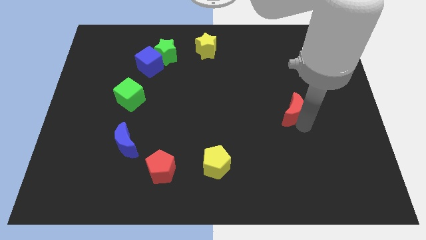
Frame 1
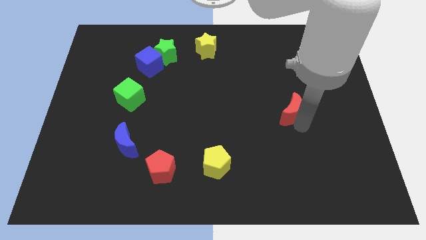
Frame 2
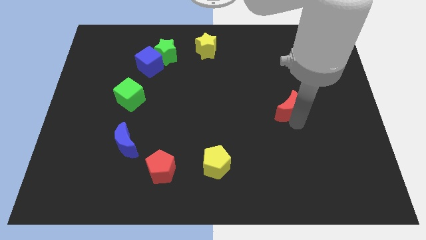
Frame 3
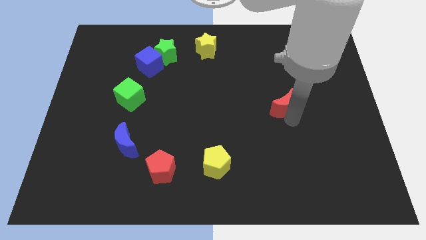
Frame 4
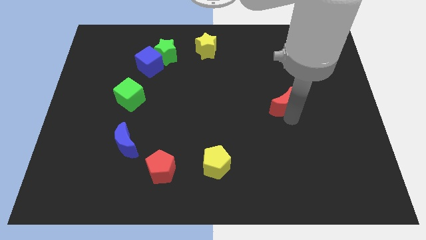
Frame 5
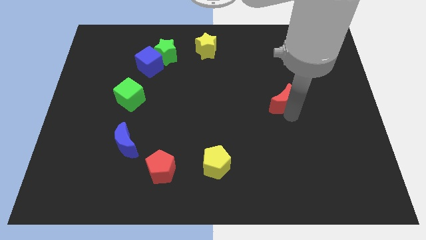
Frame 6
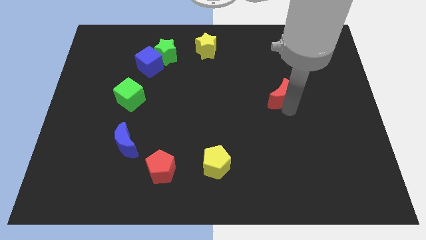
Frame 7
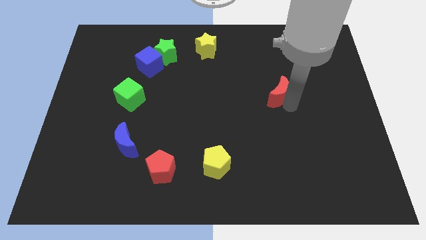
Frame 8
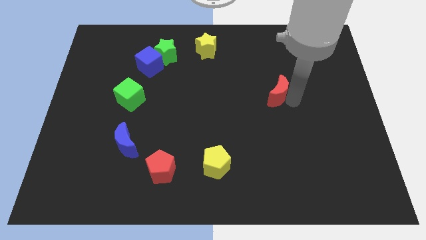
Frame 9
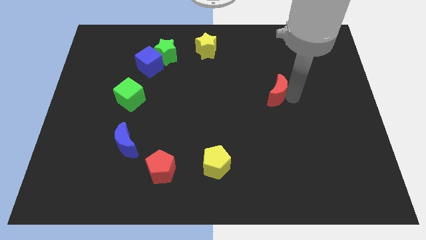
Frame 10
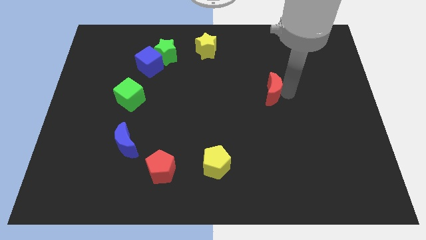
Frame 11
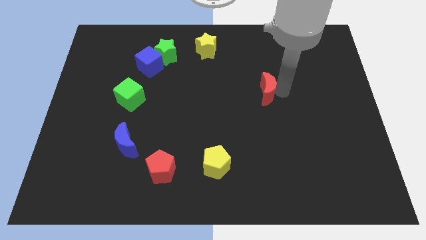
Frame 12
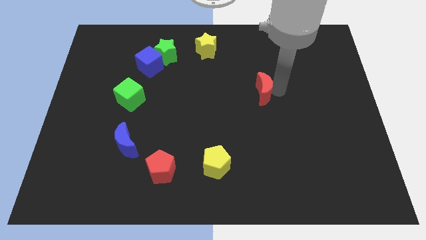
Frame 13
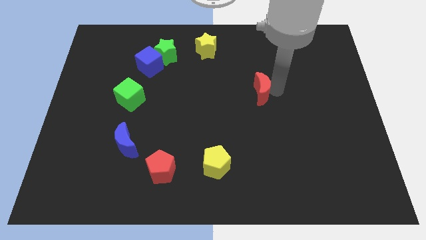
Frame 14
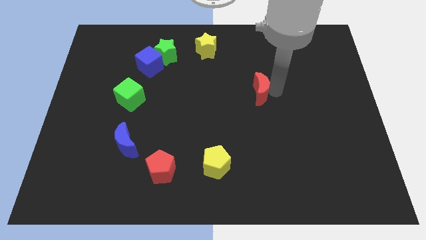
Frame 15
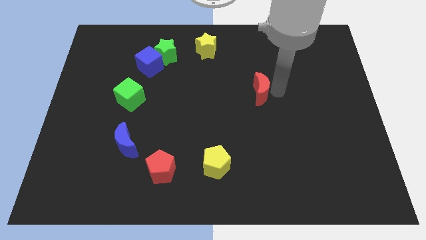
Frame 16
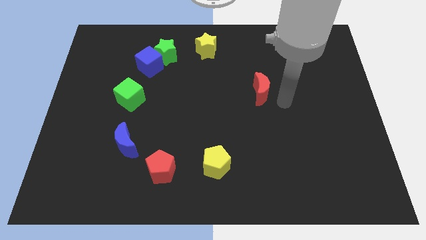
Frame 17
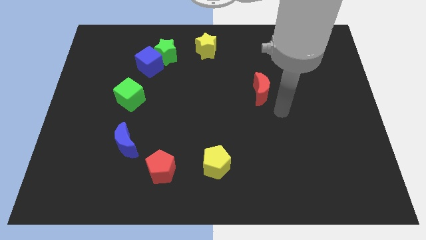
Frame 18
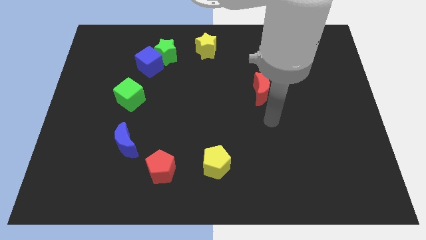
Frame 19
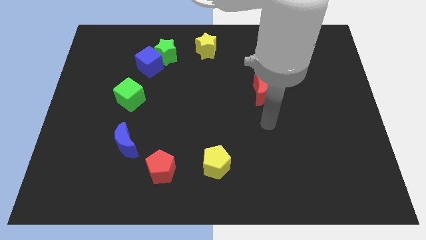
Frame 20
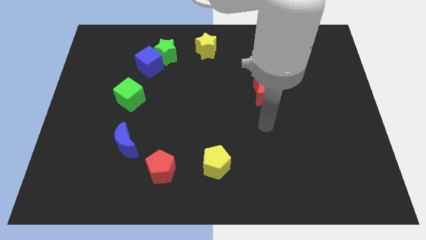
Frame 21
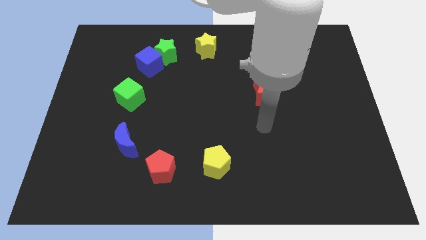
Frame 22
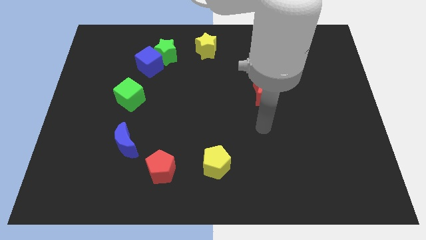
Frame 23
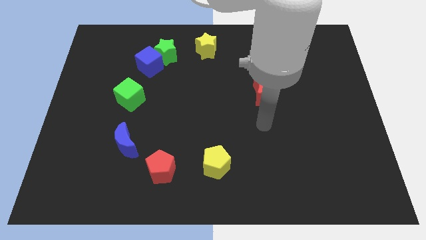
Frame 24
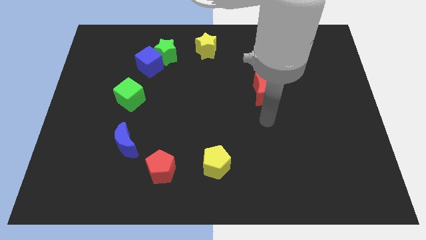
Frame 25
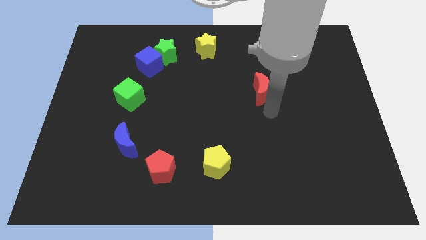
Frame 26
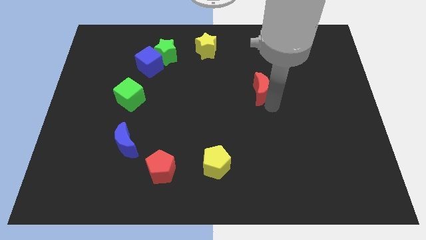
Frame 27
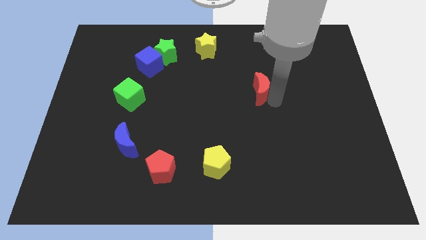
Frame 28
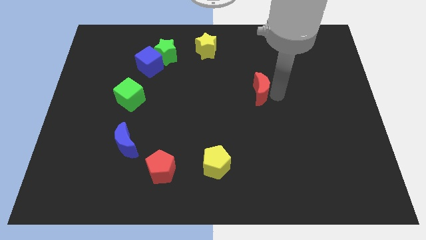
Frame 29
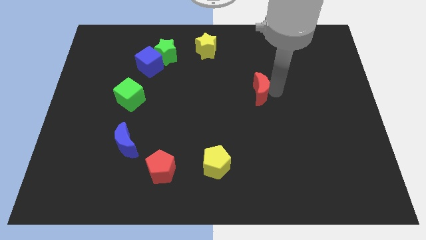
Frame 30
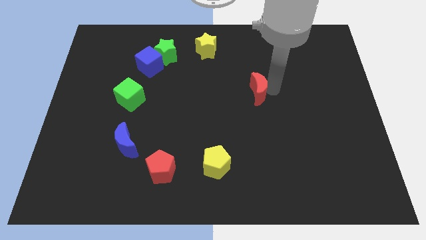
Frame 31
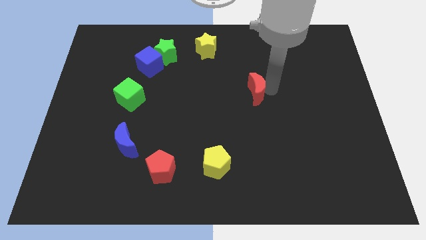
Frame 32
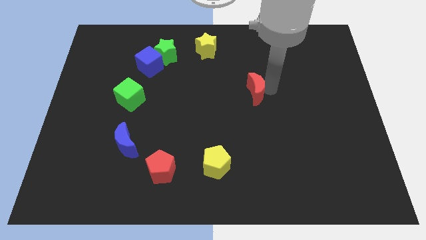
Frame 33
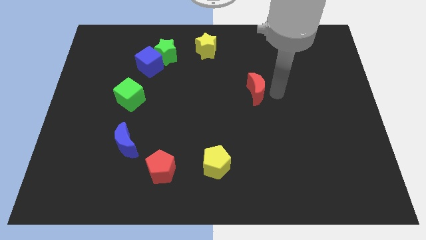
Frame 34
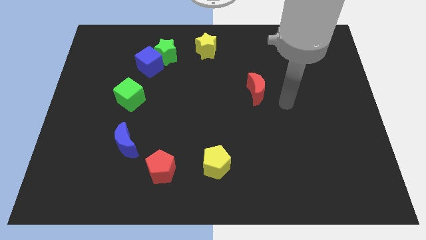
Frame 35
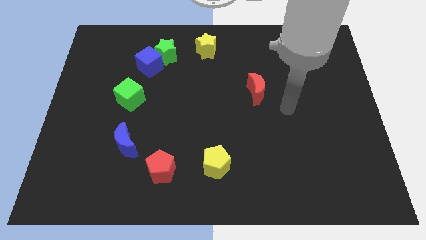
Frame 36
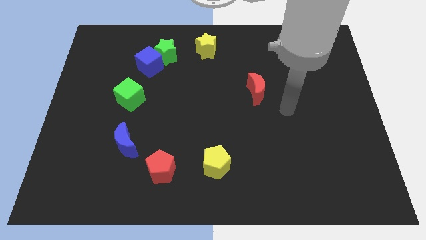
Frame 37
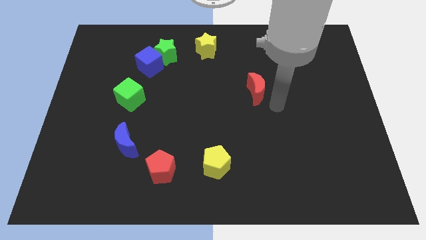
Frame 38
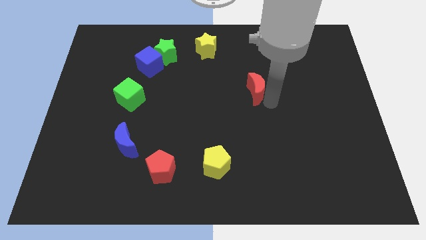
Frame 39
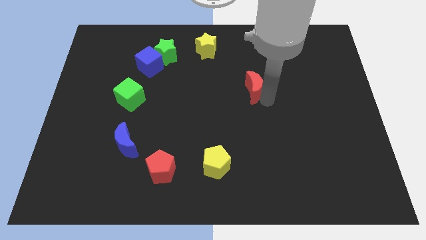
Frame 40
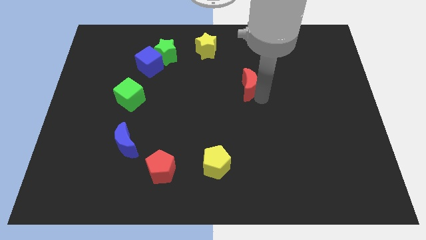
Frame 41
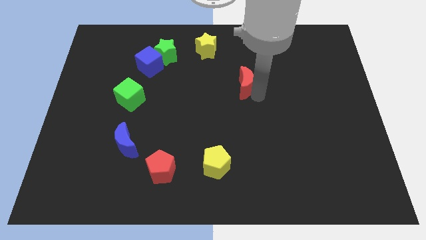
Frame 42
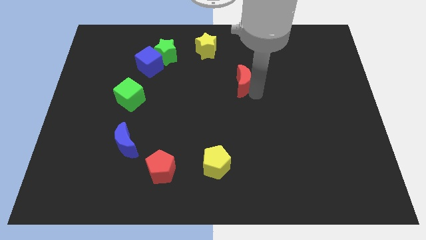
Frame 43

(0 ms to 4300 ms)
move the red crescent towards the yellow star

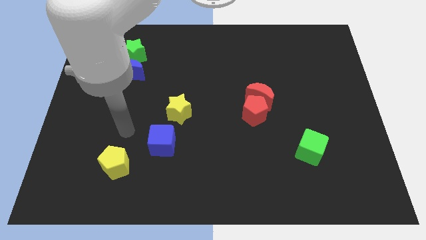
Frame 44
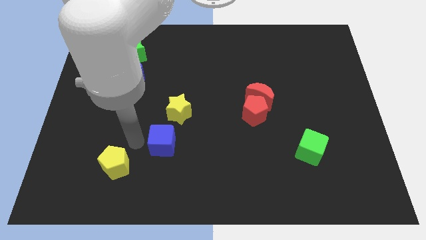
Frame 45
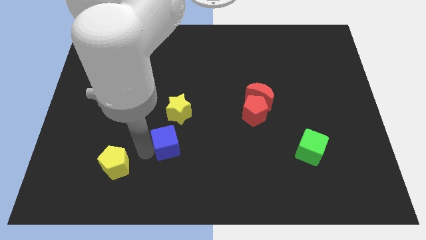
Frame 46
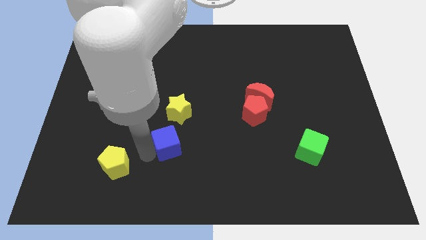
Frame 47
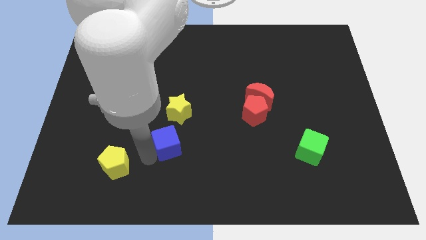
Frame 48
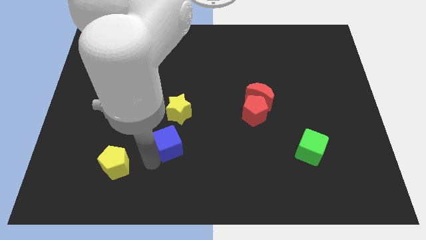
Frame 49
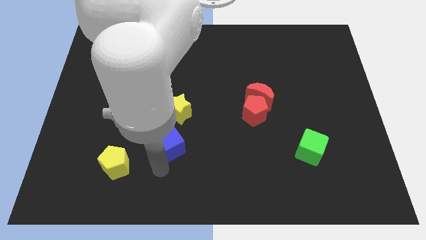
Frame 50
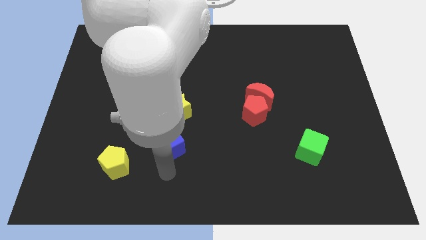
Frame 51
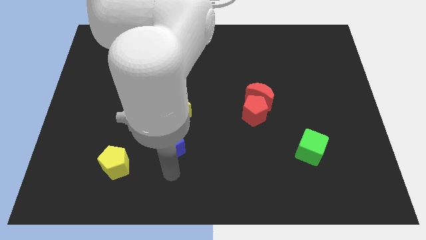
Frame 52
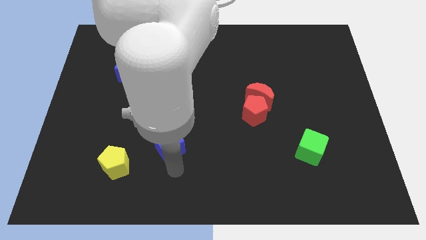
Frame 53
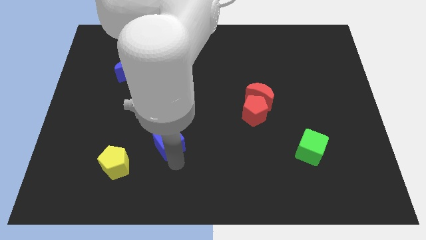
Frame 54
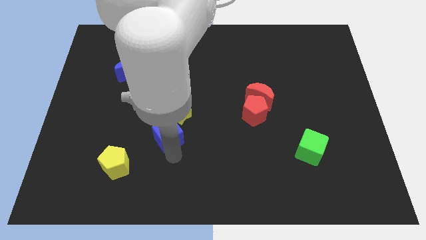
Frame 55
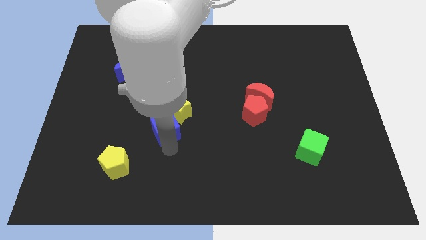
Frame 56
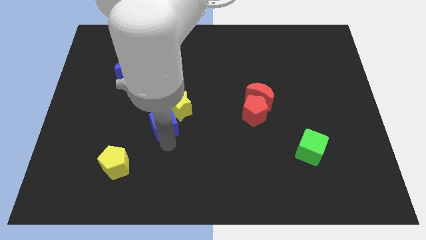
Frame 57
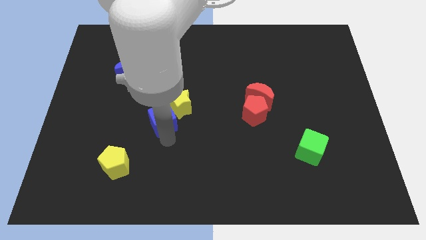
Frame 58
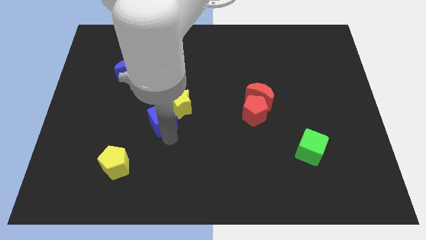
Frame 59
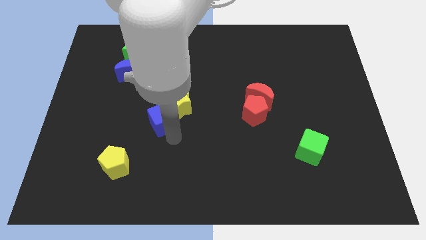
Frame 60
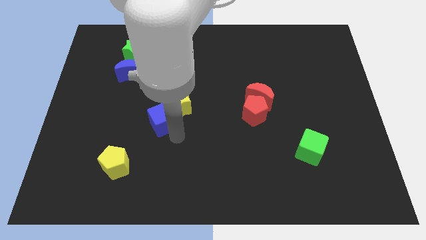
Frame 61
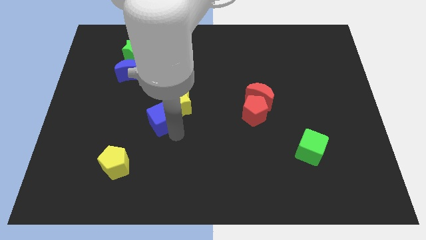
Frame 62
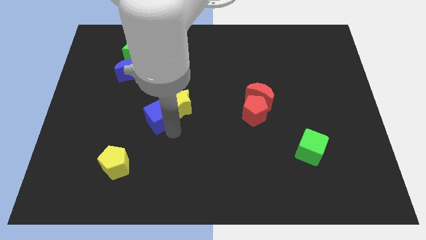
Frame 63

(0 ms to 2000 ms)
push the blue cube into the yellow star

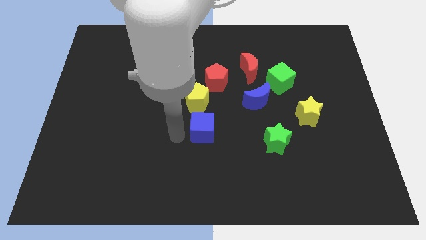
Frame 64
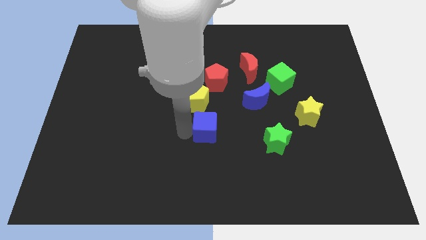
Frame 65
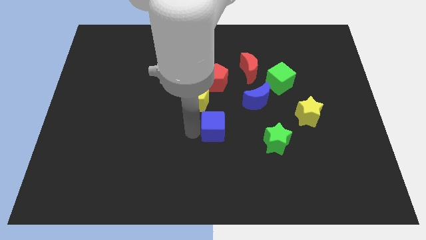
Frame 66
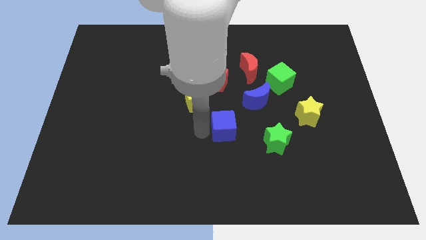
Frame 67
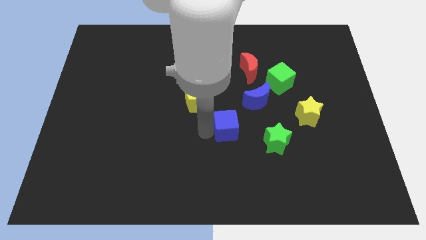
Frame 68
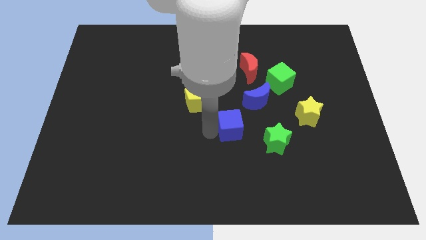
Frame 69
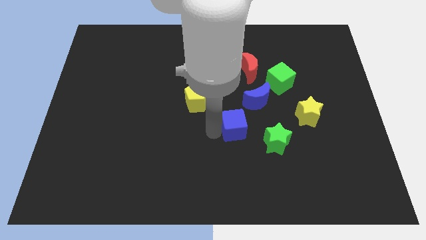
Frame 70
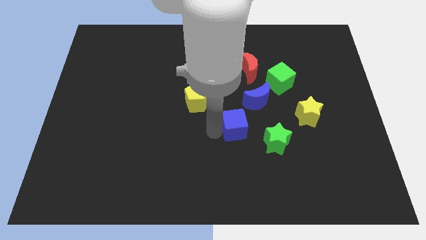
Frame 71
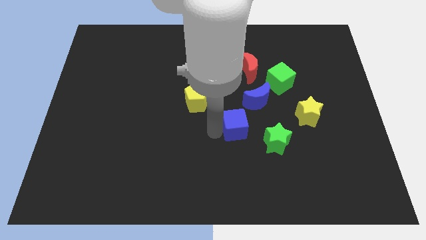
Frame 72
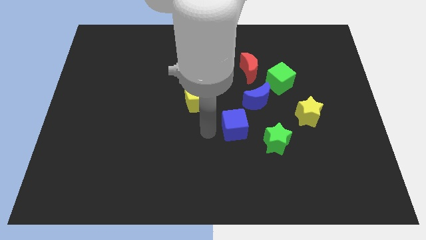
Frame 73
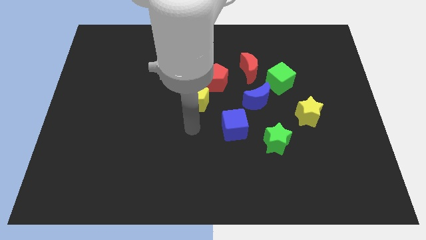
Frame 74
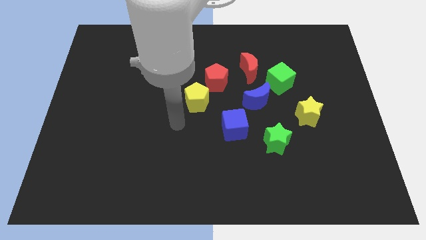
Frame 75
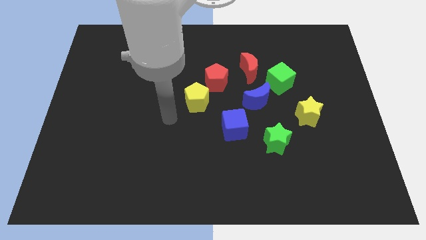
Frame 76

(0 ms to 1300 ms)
move the blue cube diagonally bottom left to the blue crescent

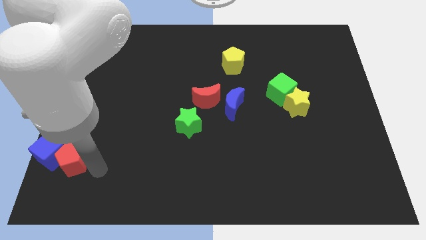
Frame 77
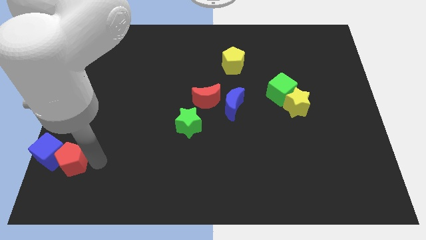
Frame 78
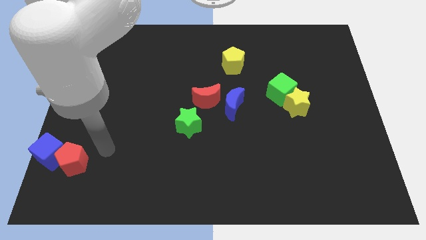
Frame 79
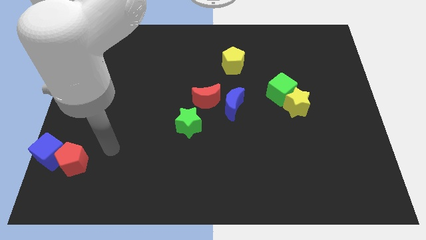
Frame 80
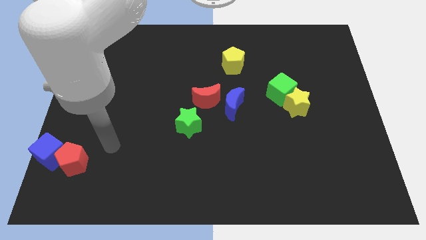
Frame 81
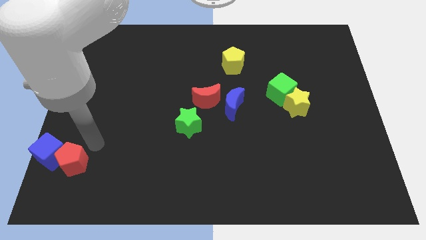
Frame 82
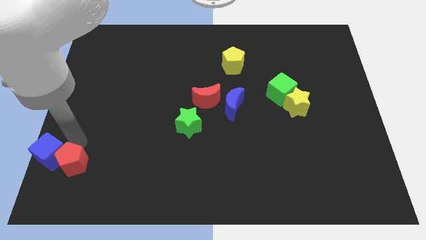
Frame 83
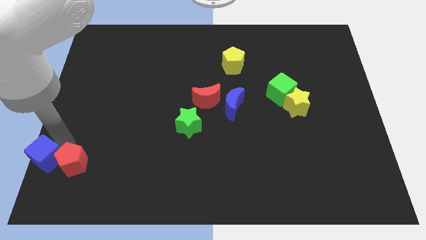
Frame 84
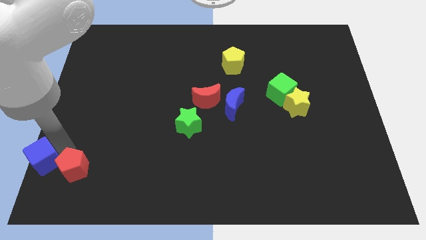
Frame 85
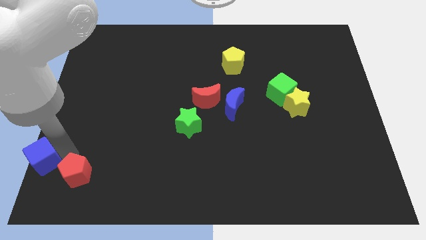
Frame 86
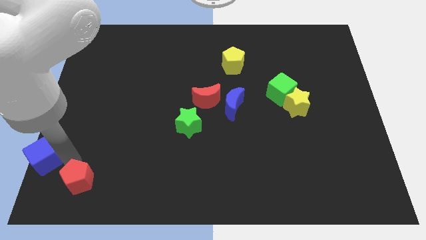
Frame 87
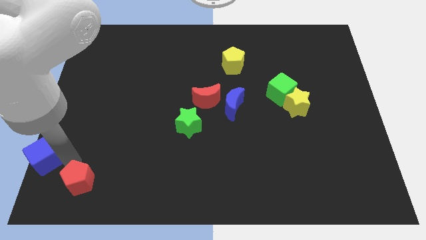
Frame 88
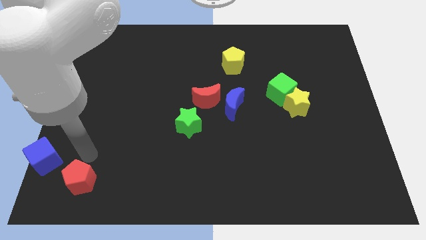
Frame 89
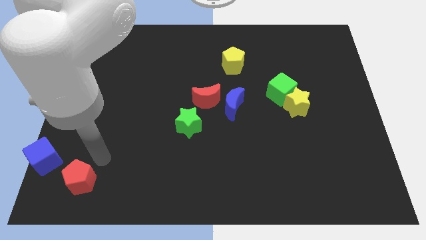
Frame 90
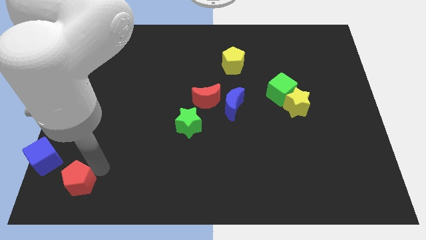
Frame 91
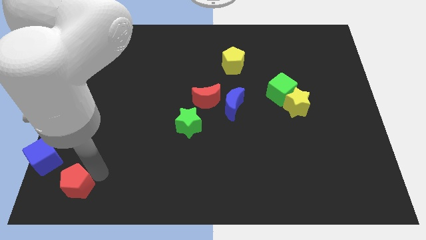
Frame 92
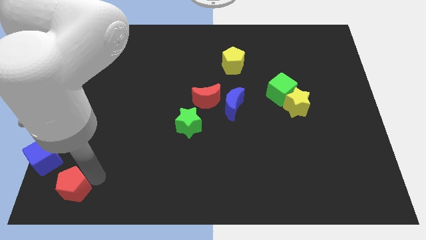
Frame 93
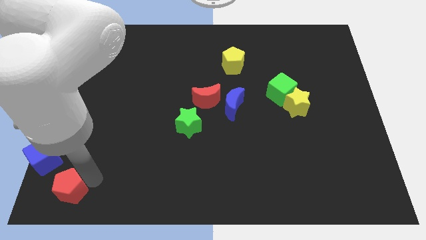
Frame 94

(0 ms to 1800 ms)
push the red pentagon towards the left bottom of the board
